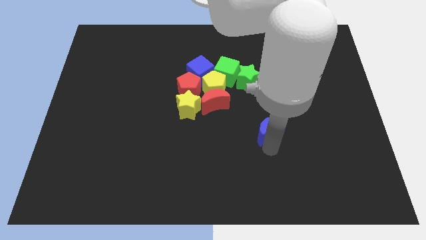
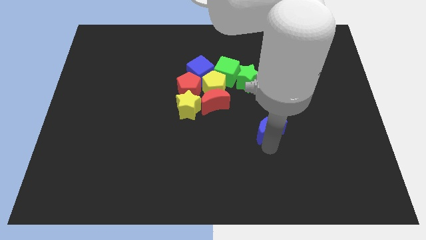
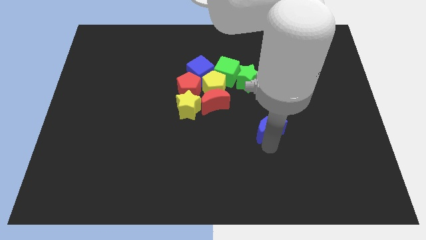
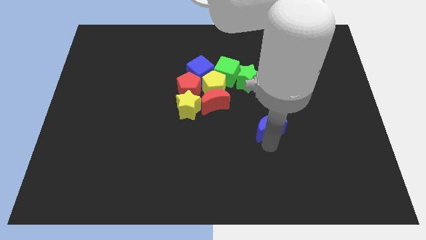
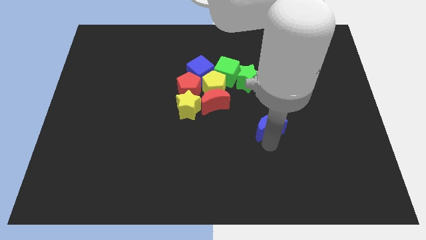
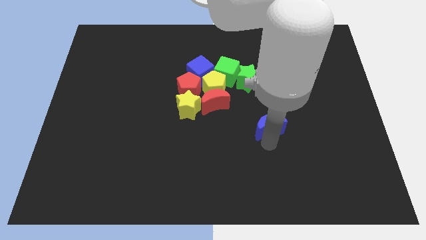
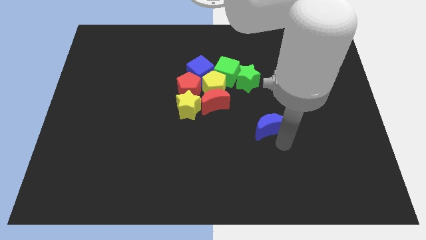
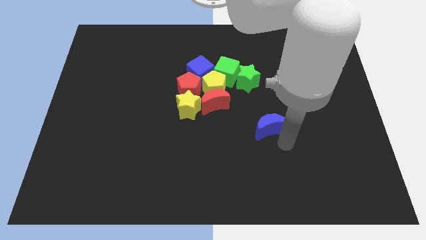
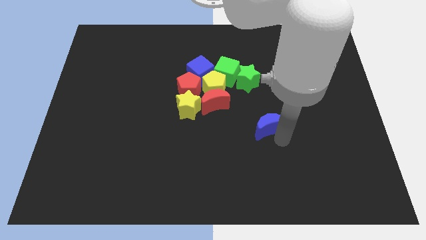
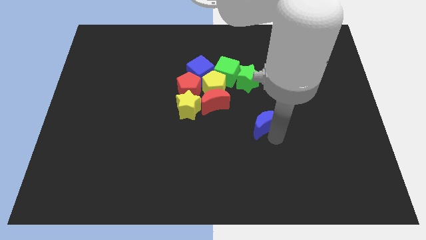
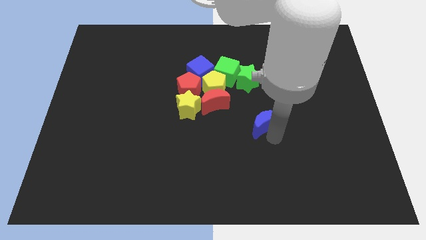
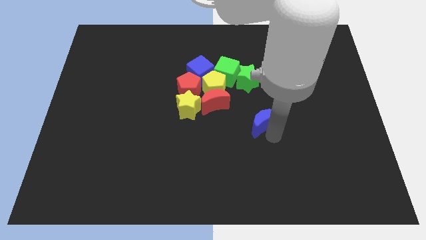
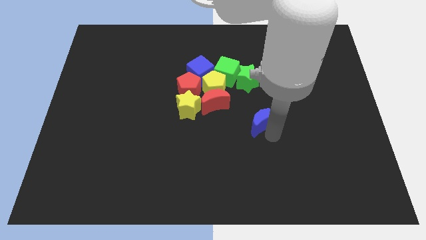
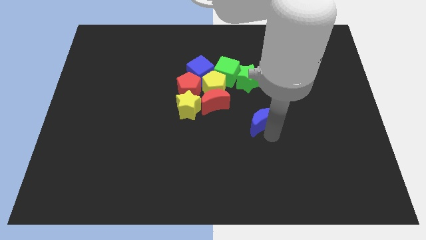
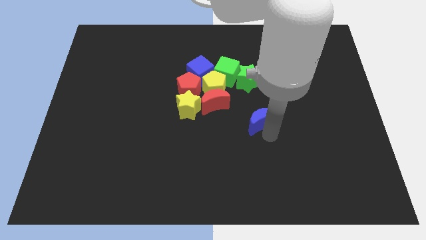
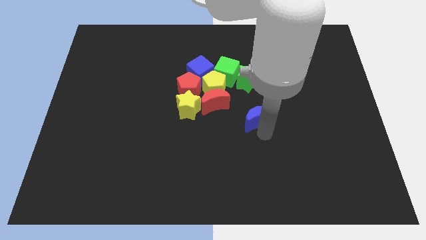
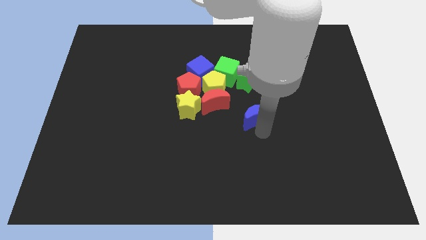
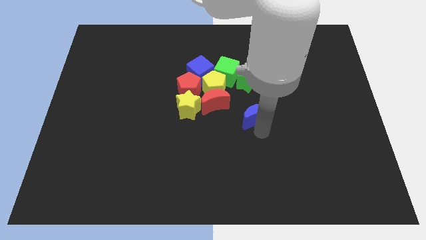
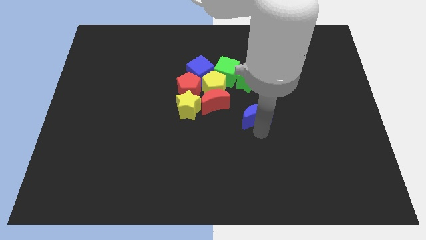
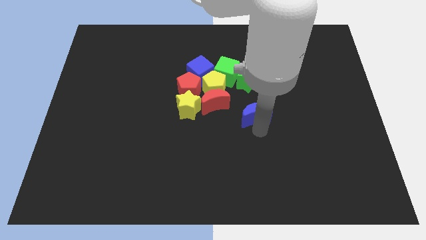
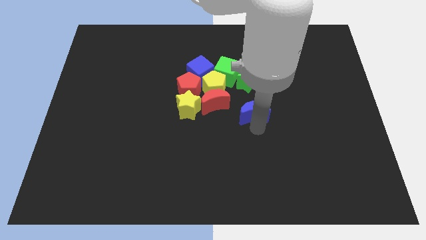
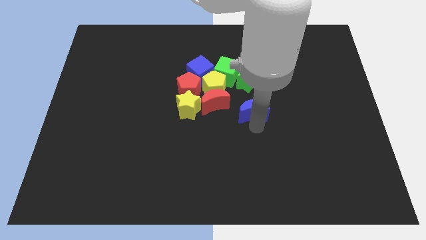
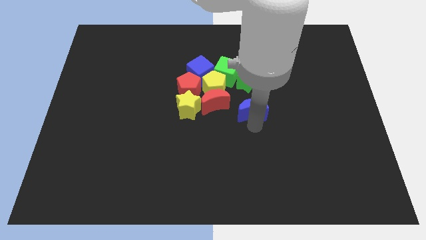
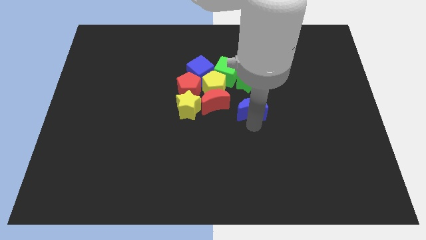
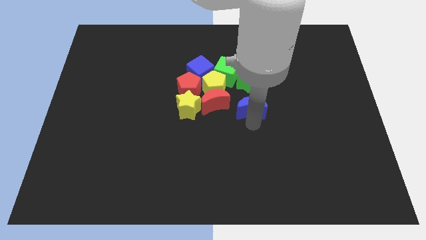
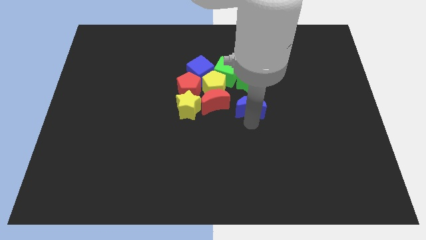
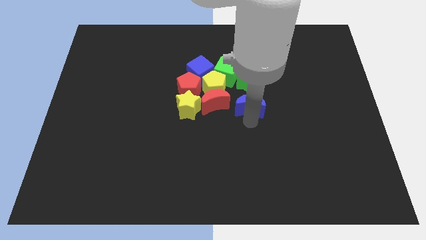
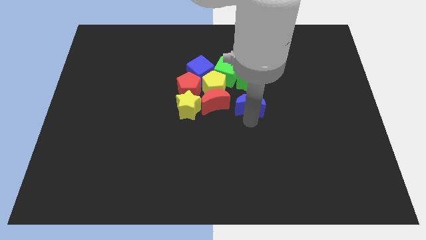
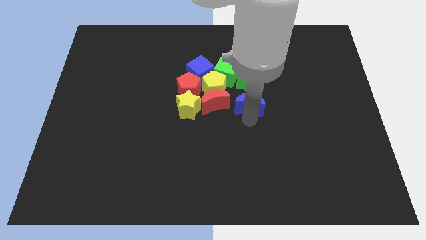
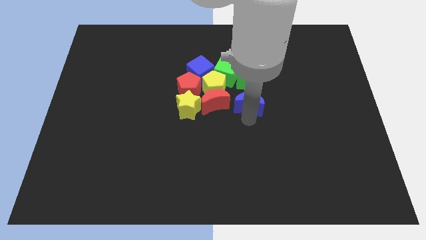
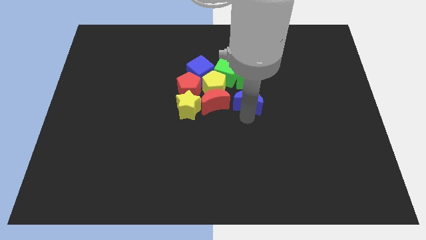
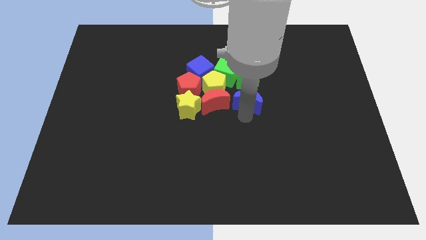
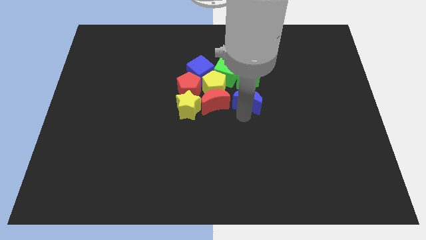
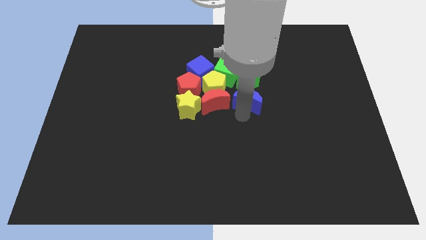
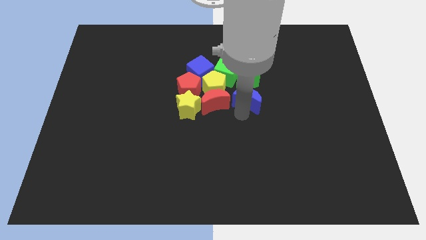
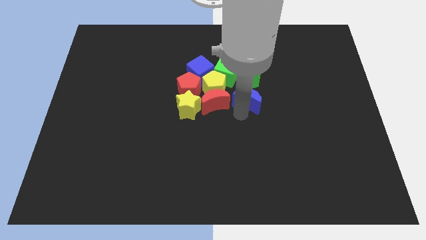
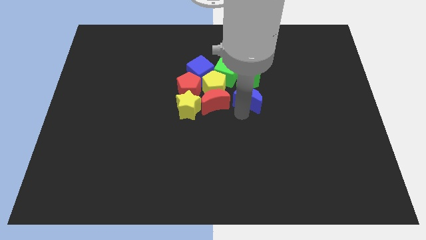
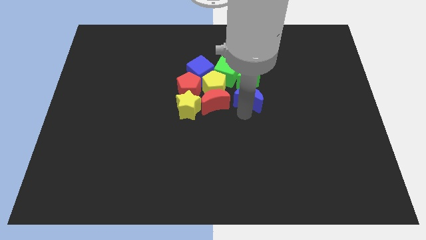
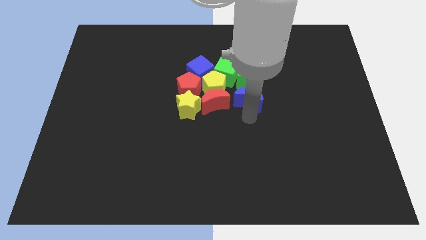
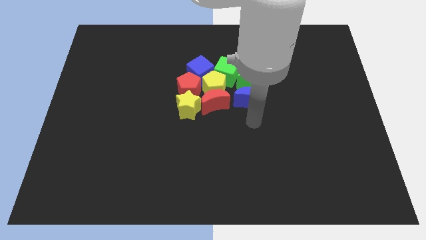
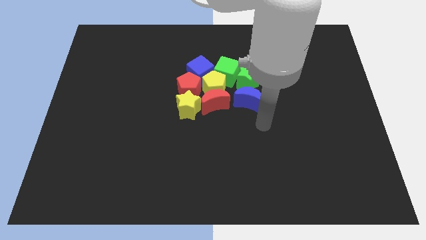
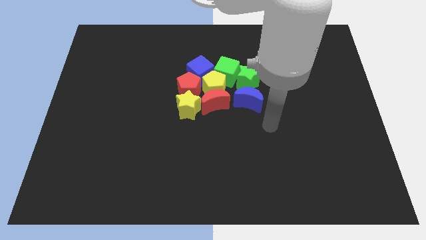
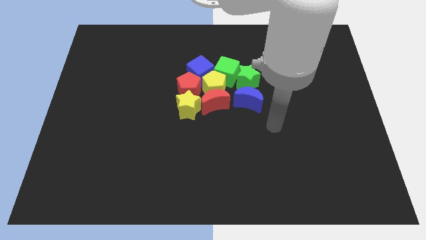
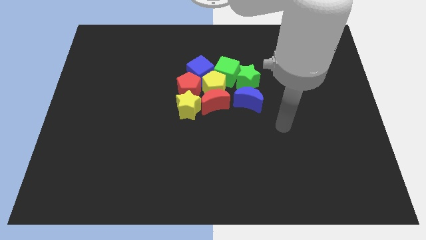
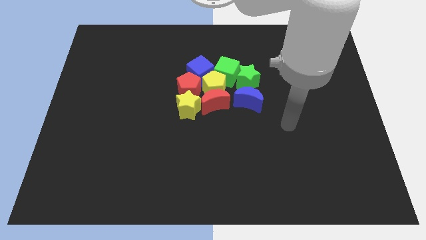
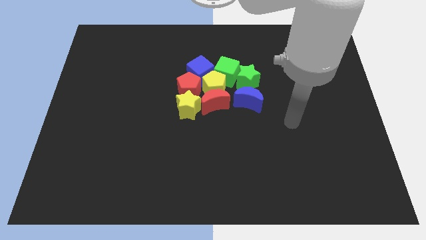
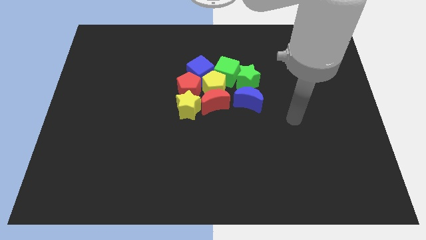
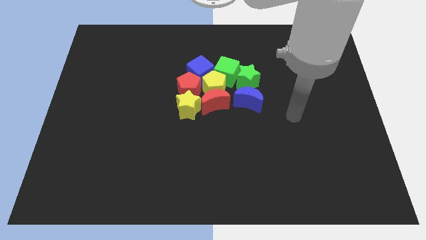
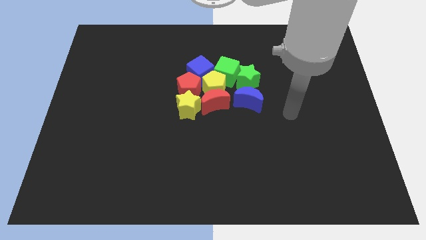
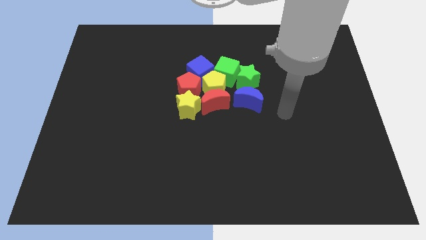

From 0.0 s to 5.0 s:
move the blue crescent to the group of blocks

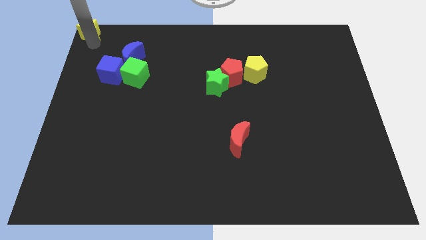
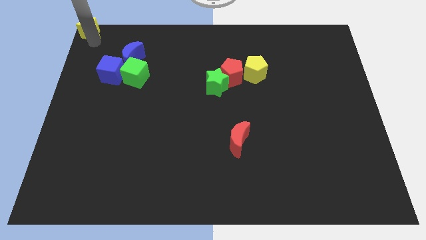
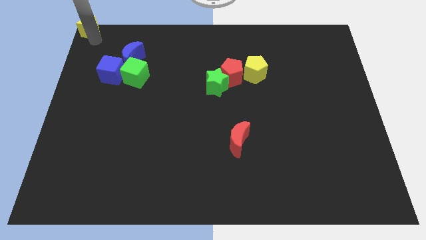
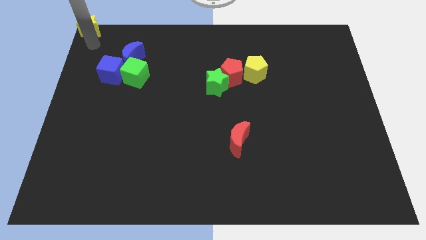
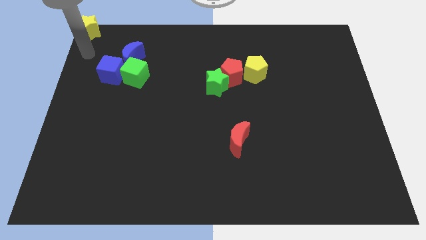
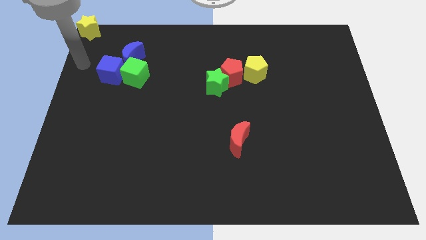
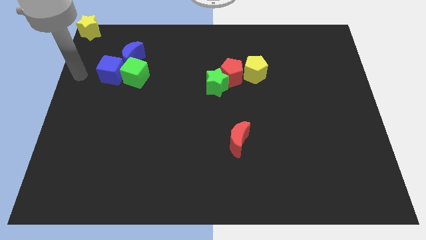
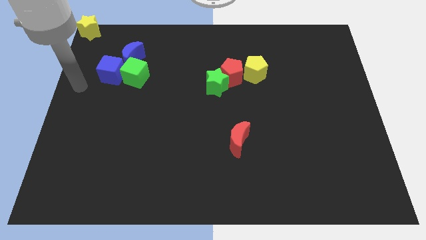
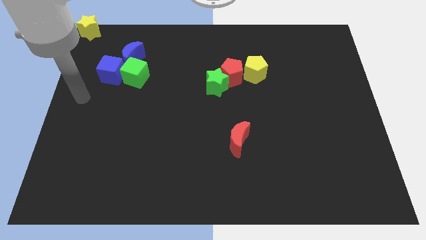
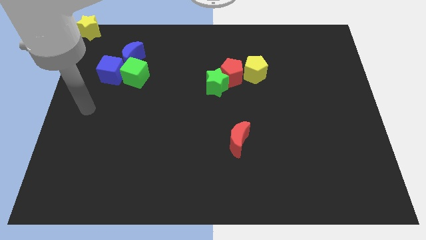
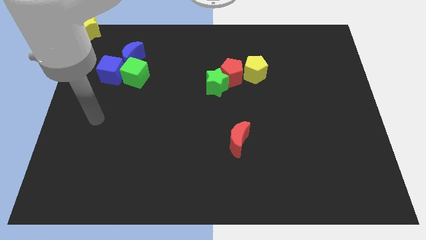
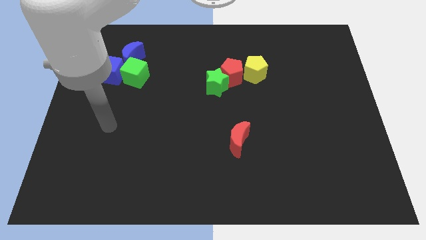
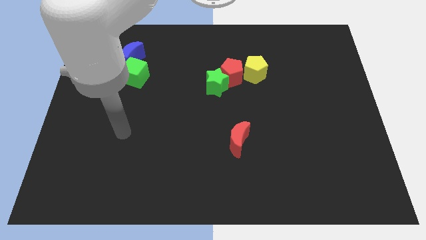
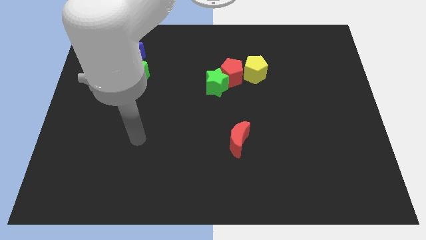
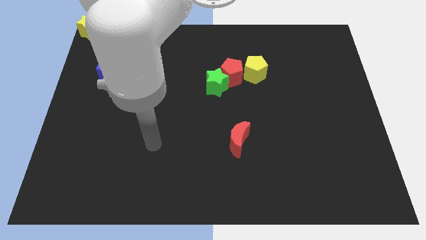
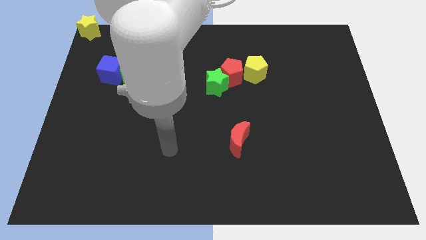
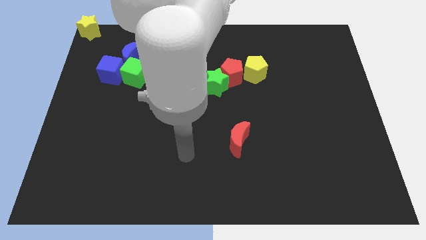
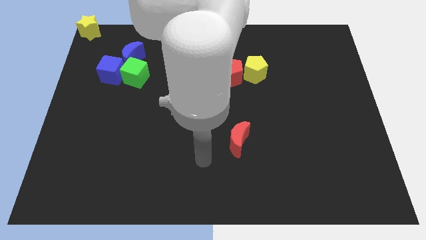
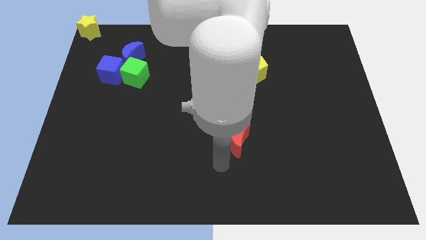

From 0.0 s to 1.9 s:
move yourself away from the yellow star

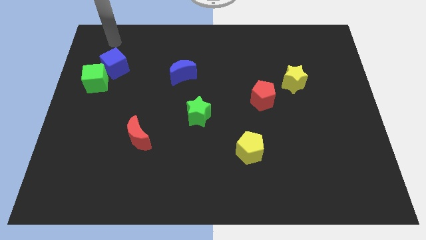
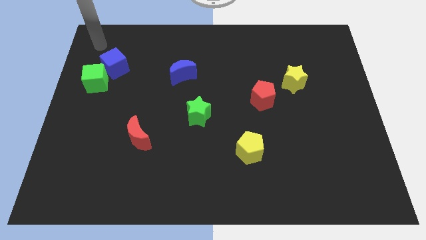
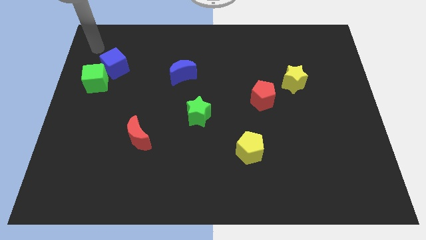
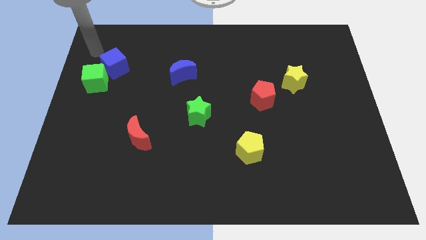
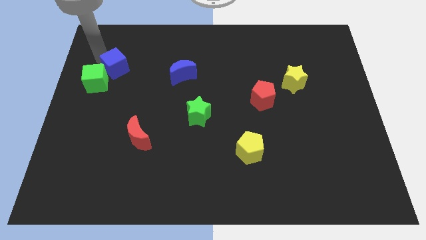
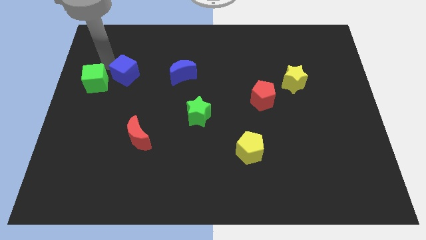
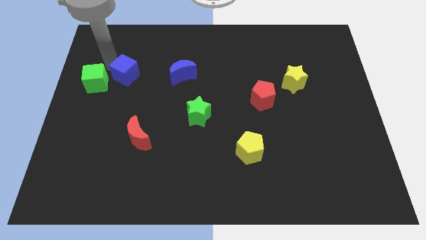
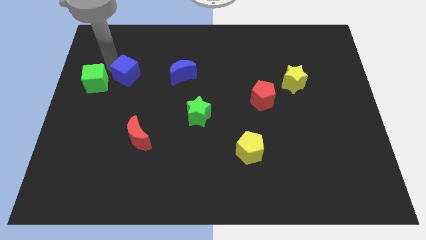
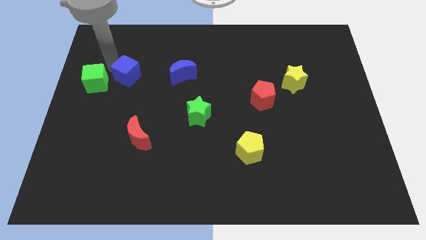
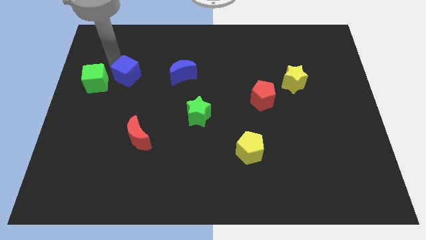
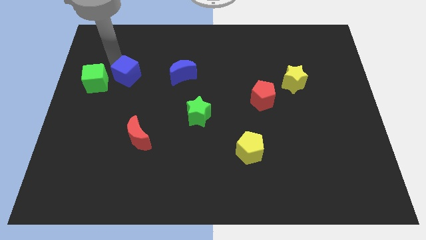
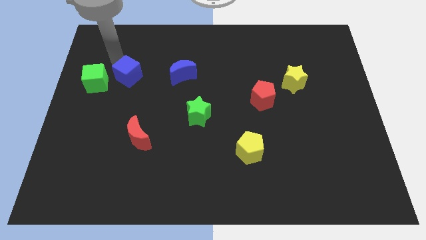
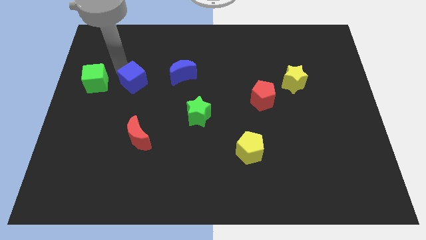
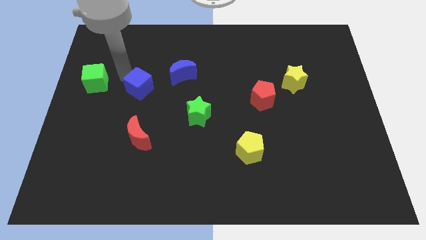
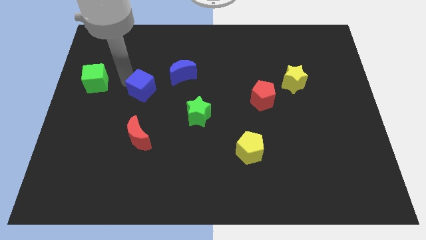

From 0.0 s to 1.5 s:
place the blue cube in between the blue moon and green cube

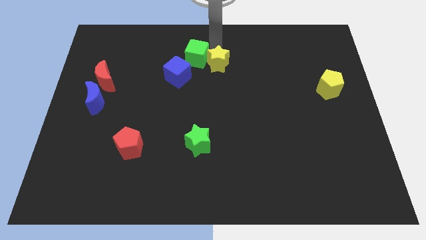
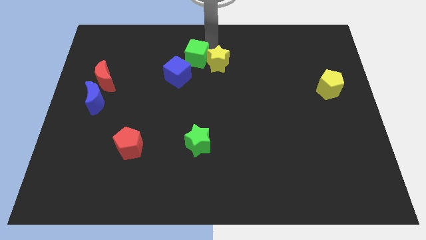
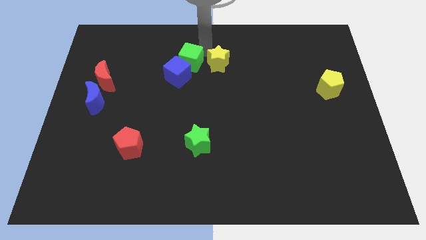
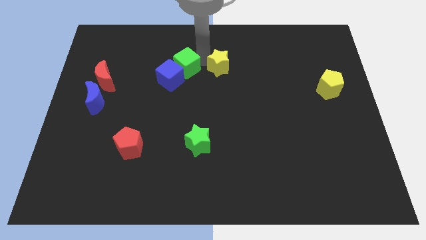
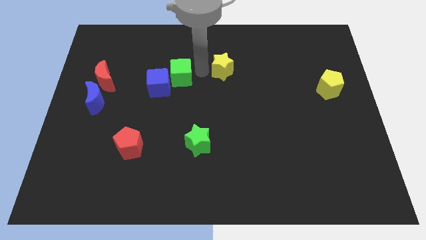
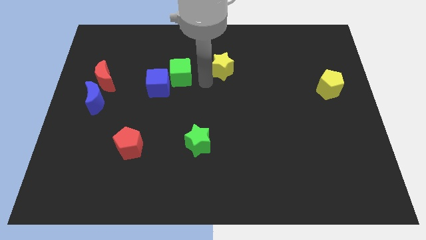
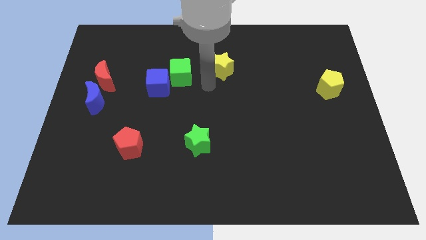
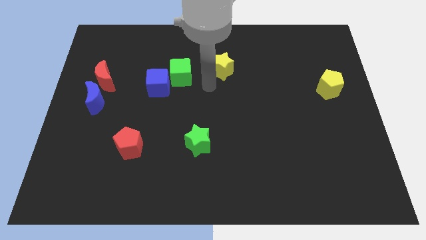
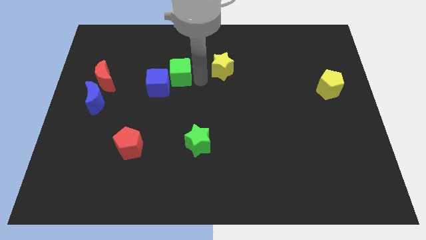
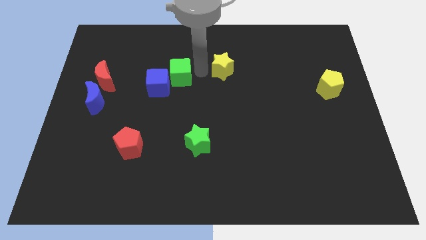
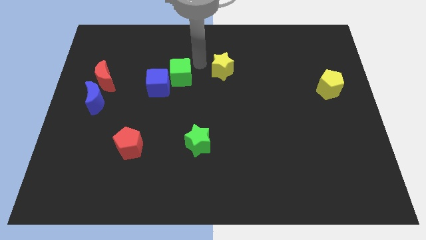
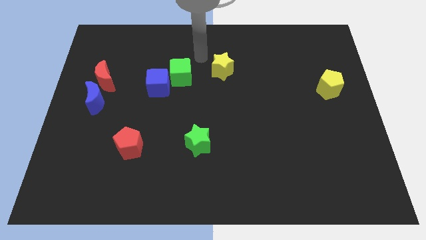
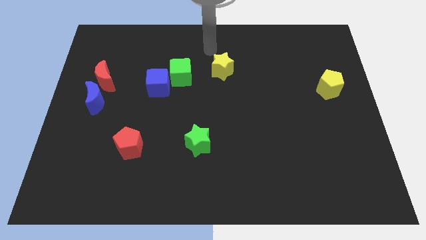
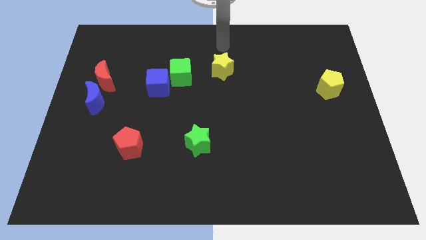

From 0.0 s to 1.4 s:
push the green cube away from the yellow star
